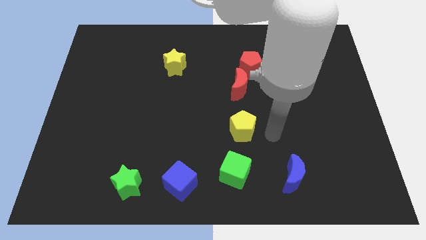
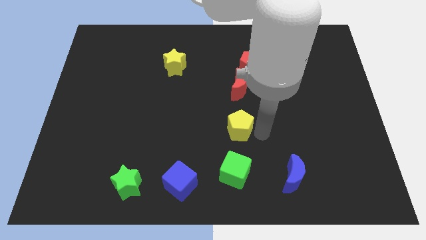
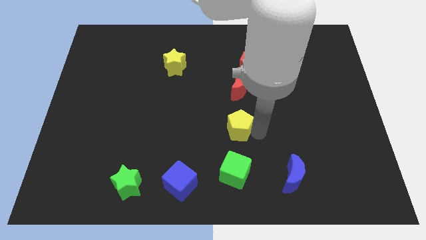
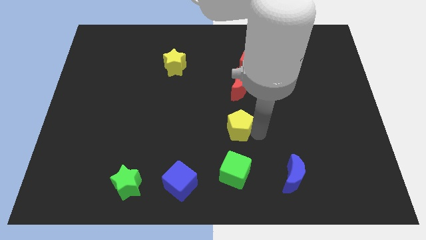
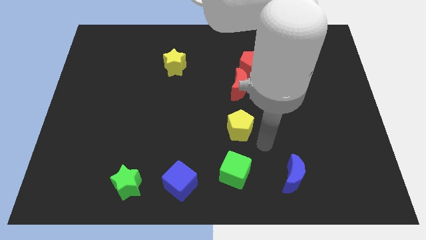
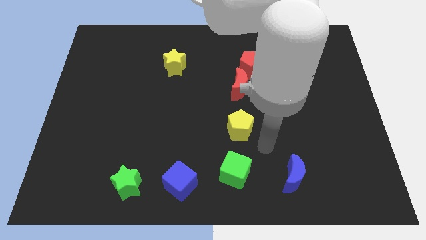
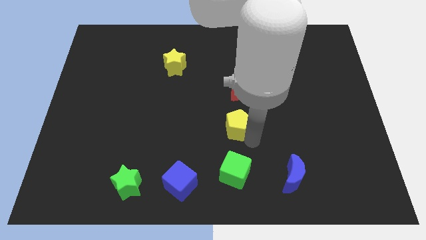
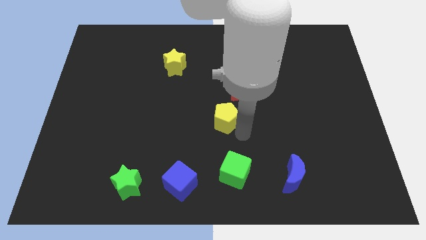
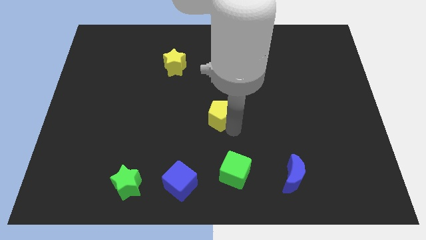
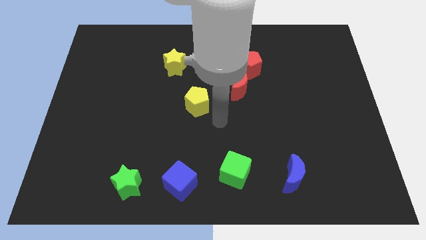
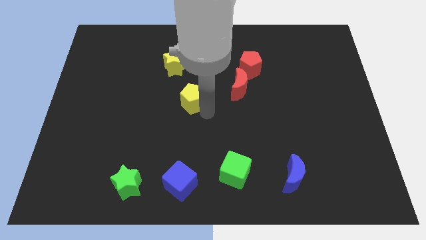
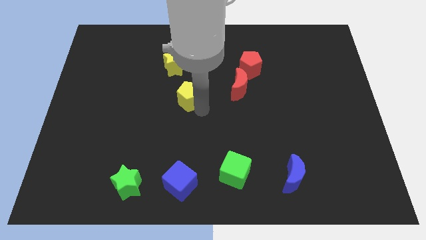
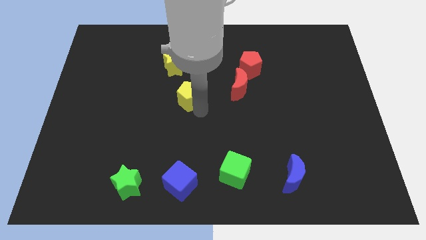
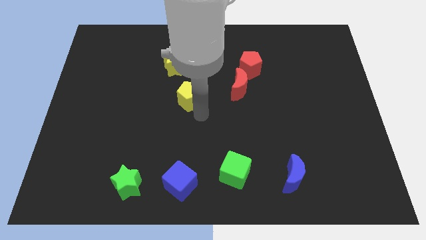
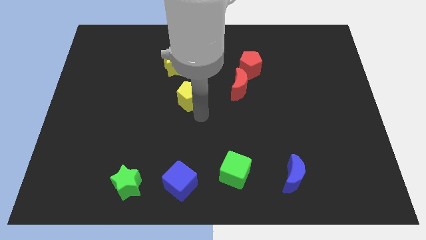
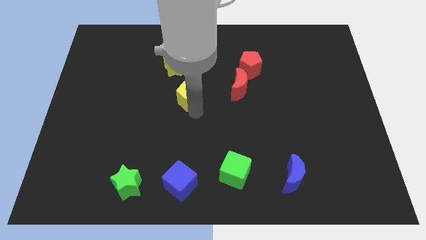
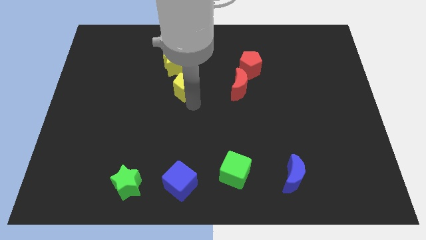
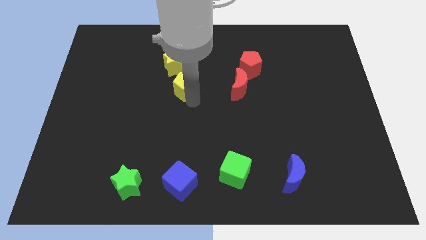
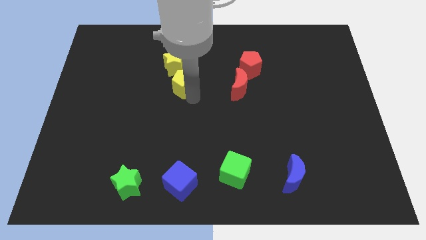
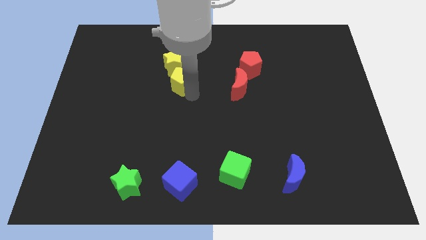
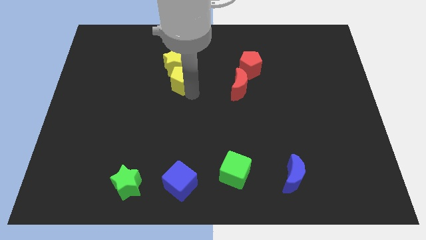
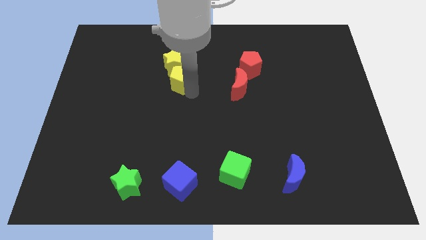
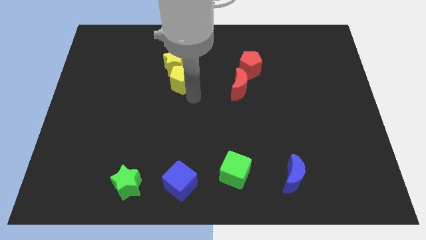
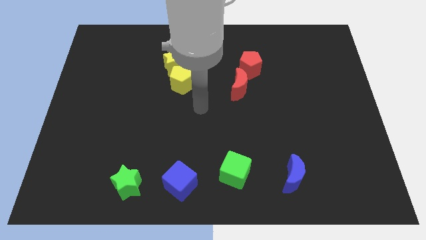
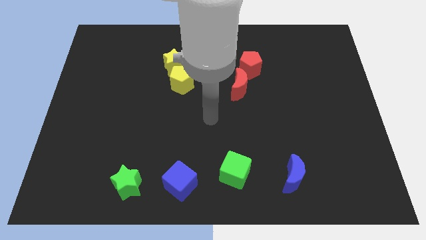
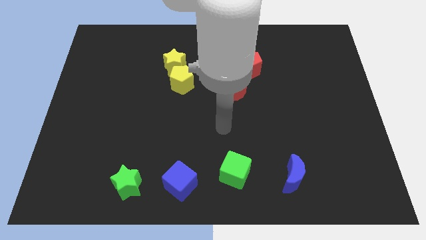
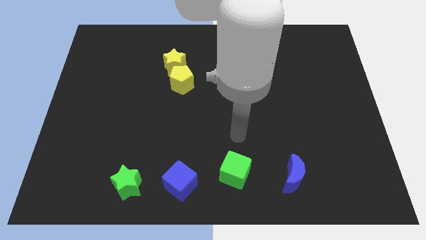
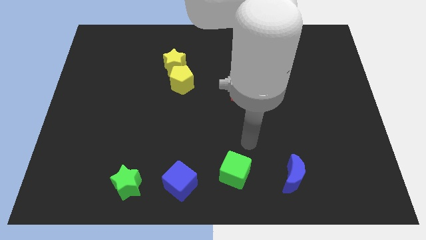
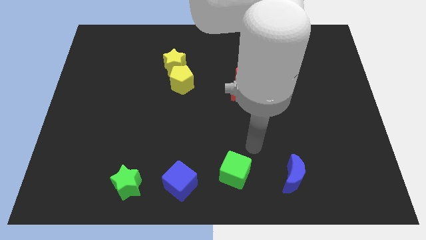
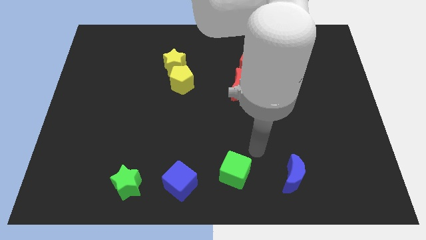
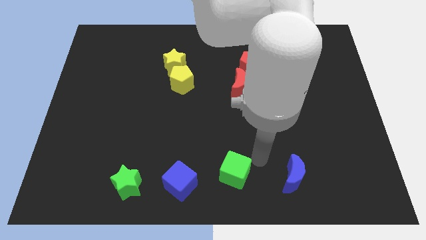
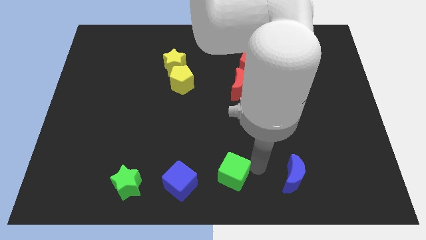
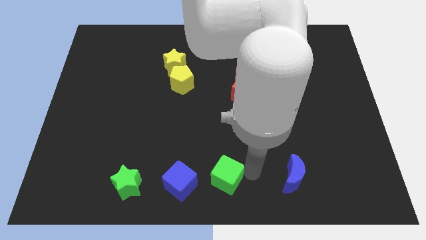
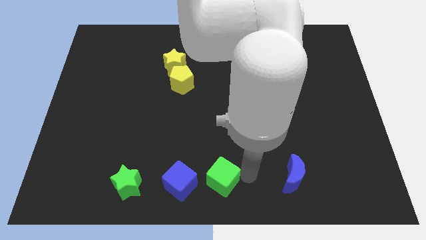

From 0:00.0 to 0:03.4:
push the green cube to the right side of the blue cube

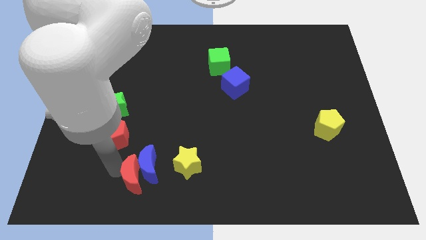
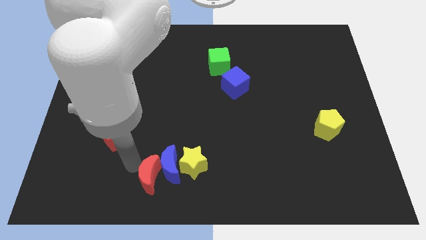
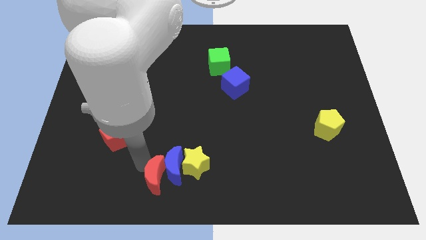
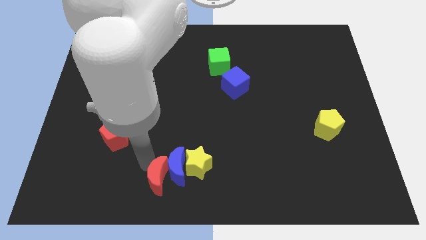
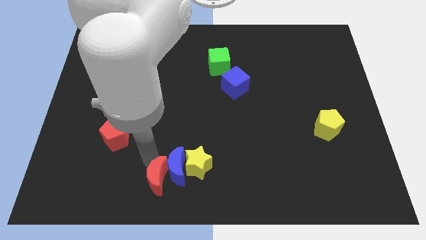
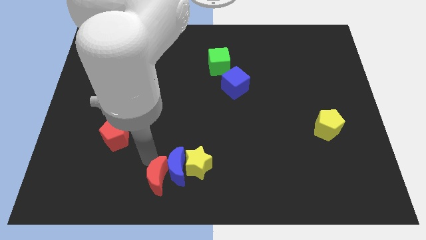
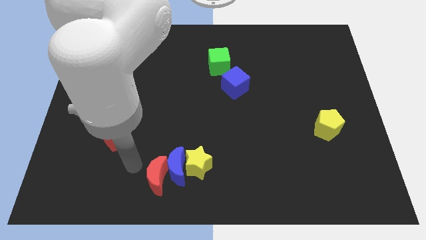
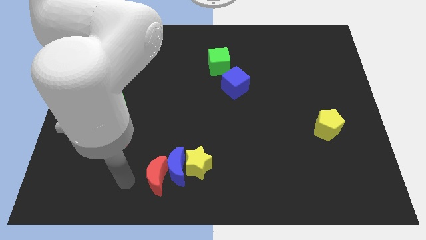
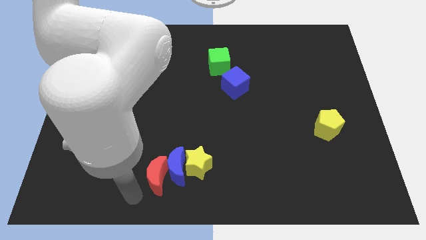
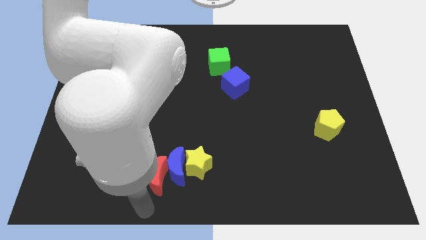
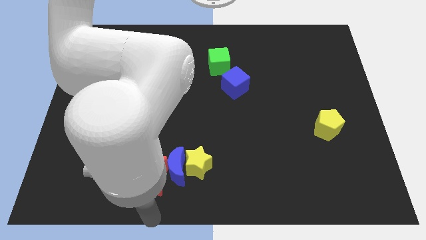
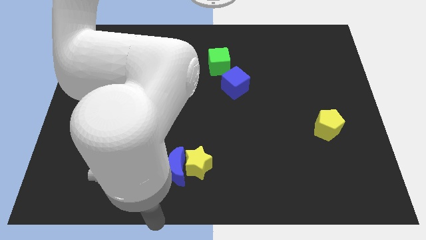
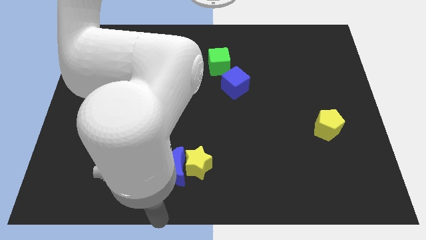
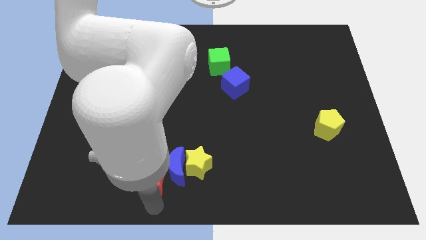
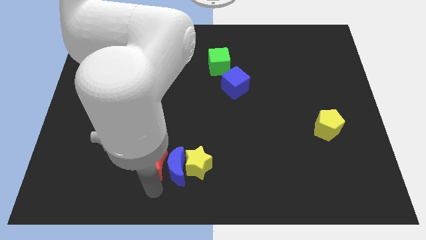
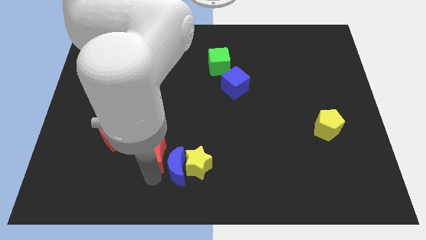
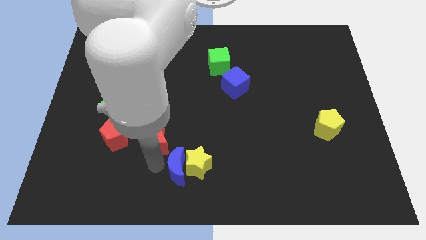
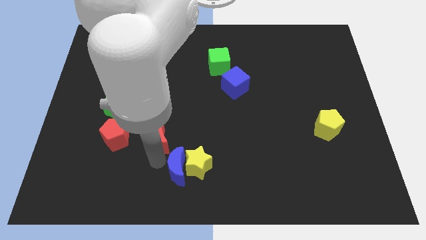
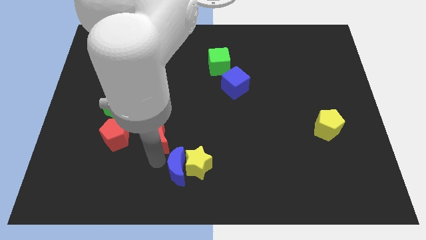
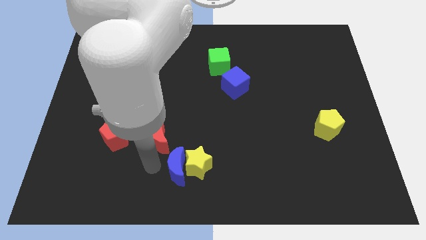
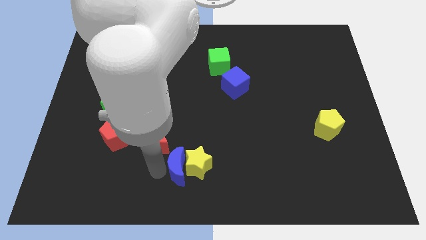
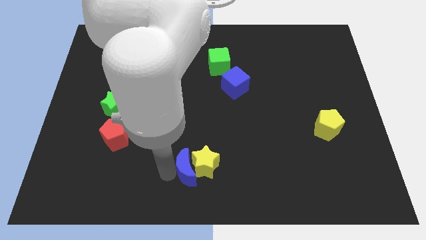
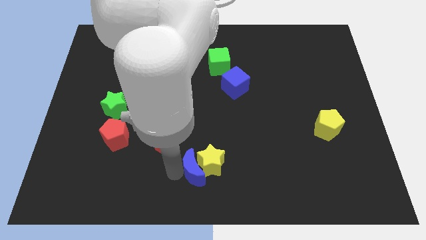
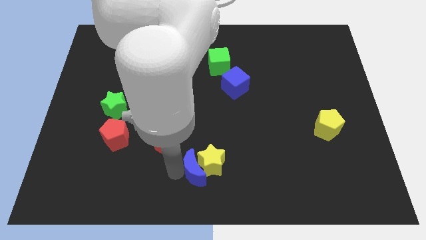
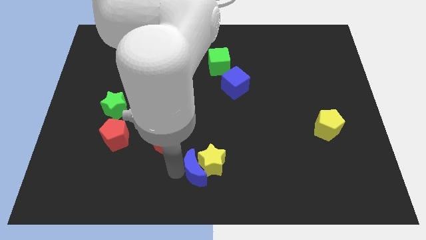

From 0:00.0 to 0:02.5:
move the blue moon into the yellow star

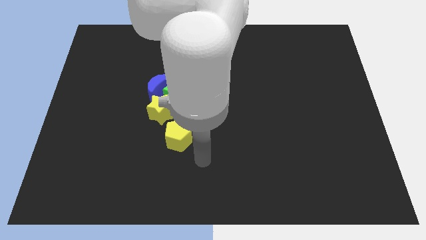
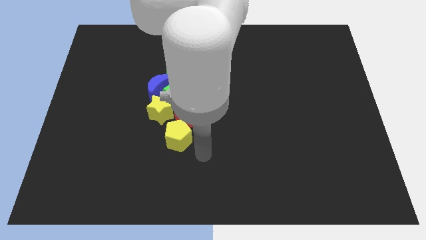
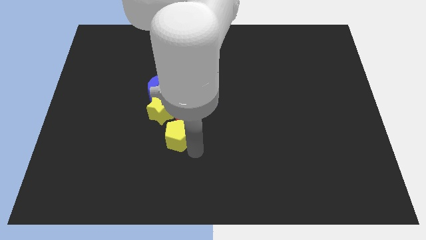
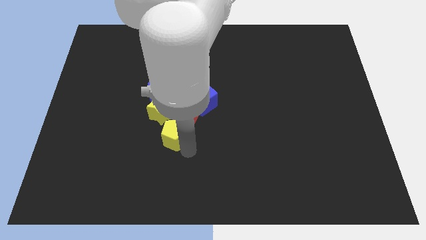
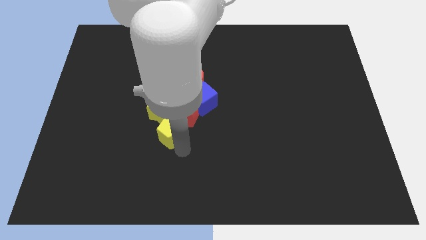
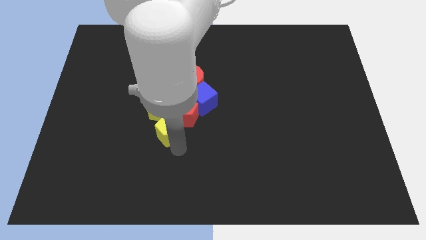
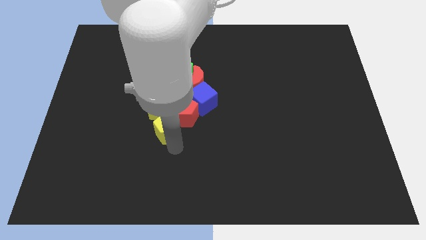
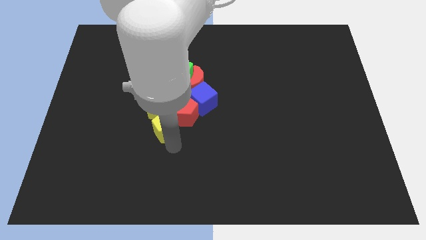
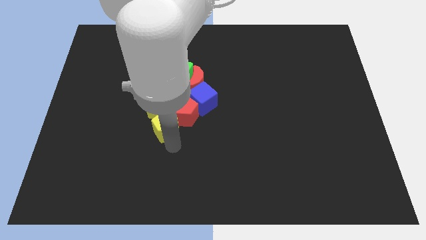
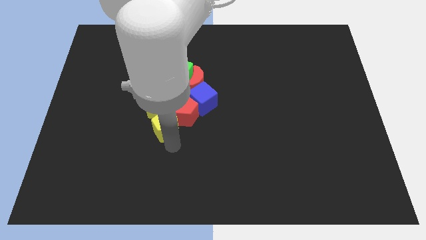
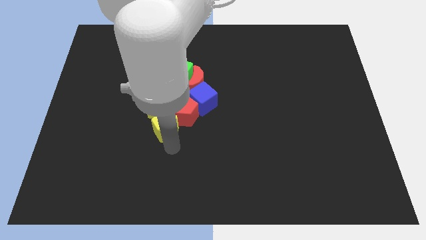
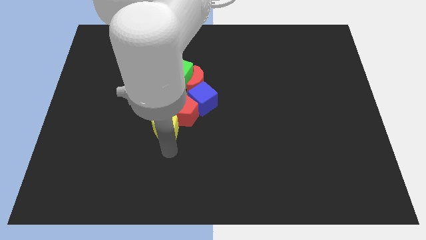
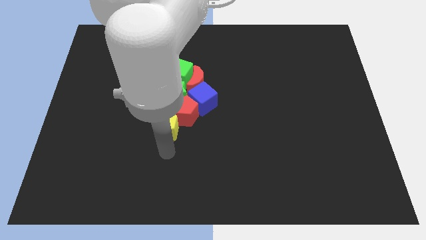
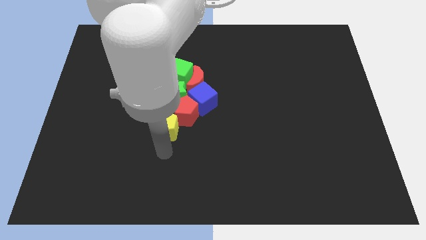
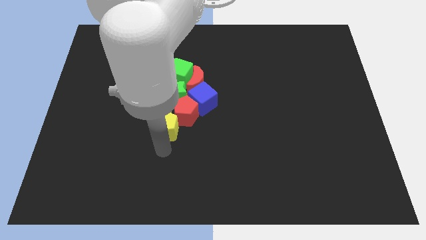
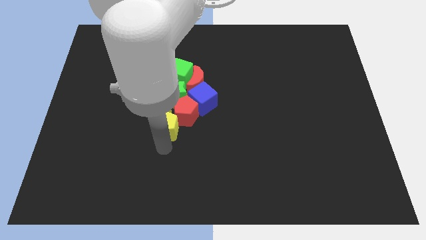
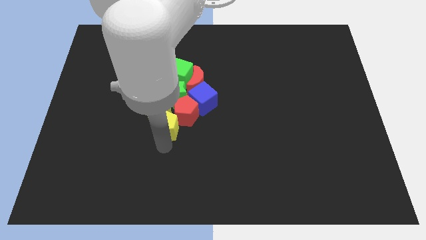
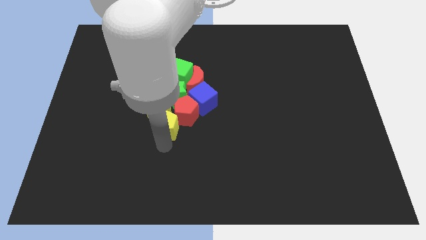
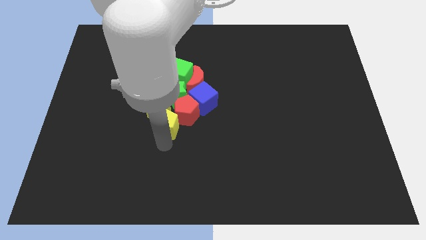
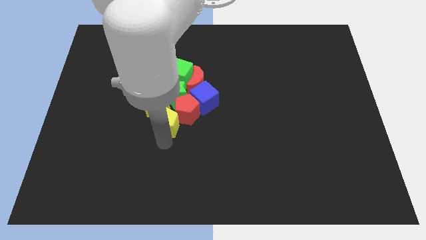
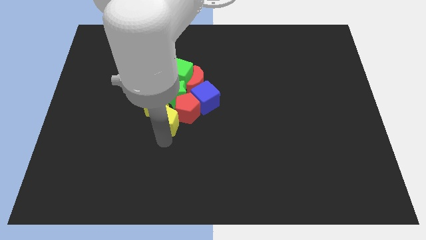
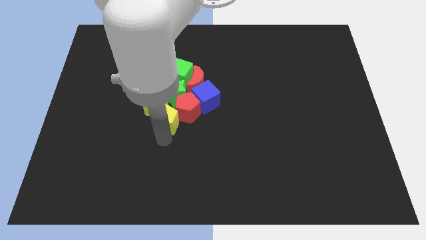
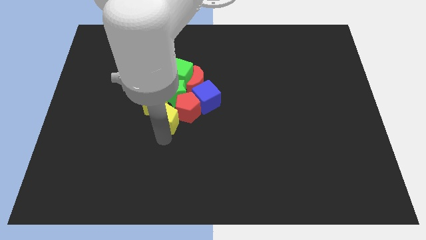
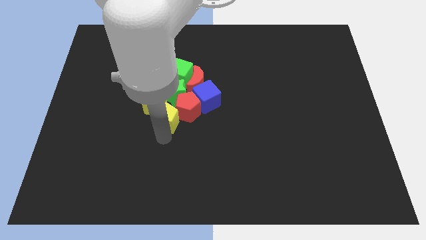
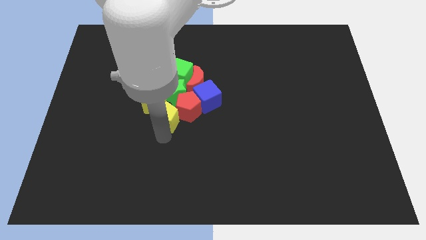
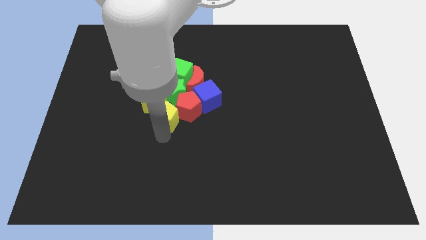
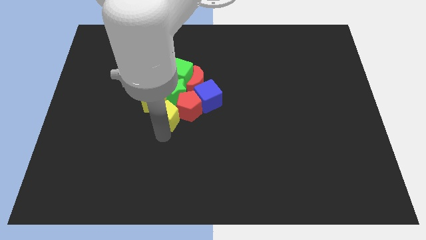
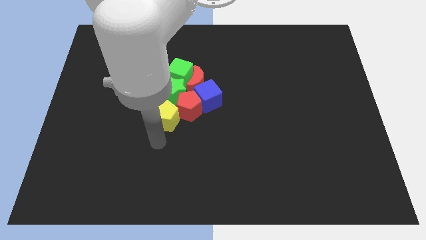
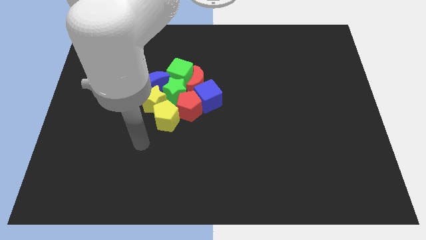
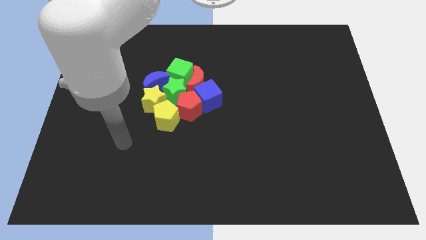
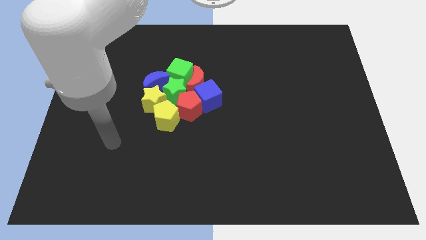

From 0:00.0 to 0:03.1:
move the yellow pentagon between yellow star and red pentagon
